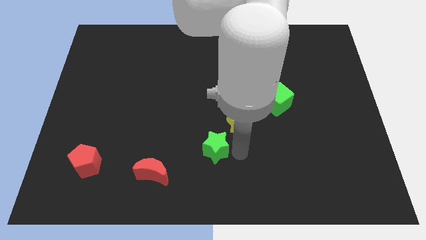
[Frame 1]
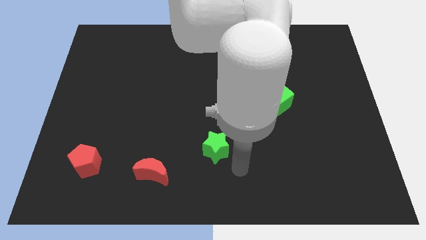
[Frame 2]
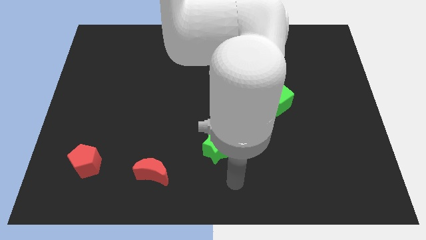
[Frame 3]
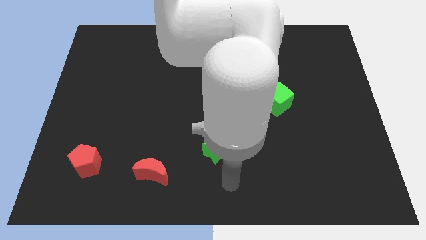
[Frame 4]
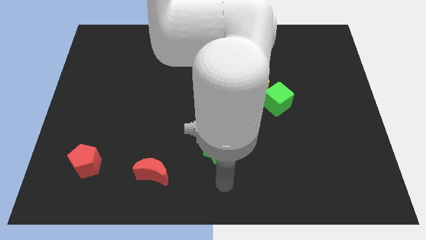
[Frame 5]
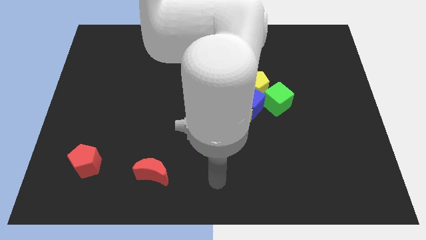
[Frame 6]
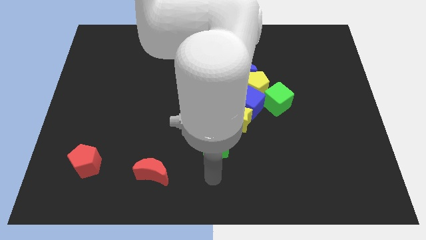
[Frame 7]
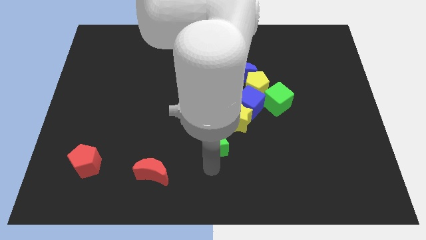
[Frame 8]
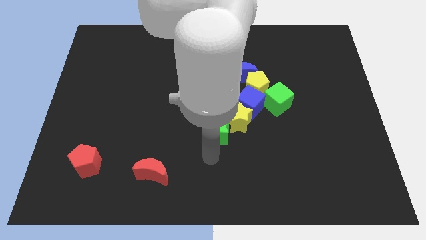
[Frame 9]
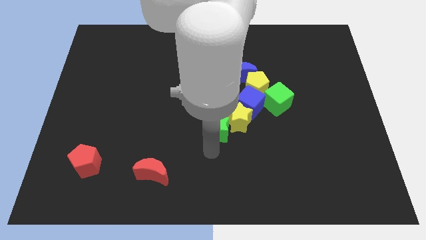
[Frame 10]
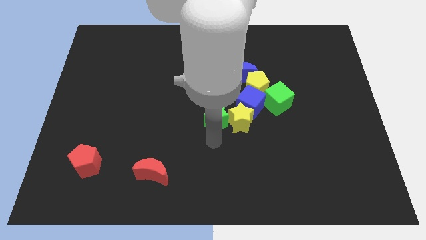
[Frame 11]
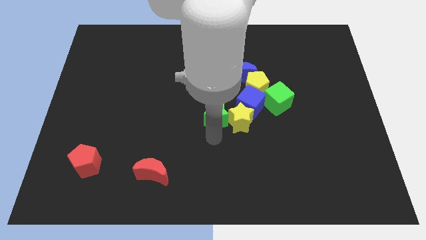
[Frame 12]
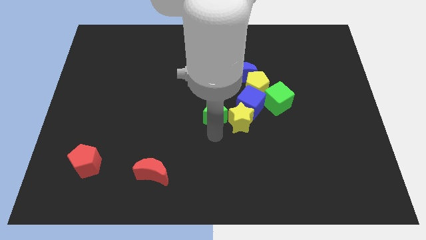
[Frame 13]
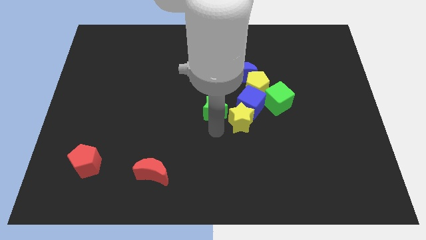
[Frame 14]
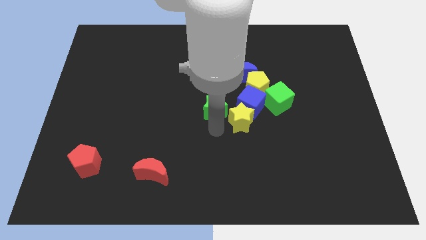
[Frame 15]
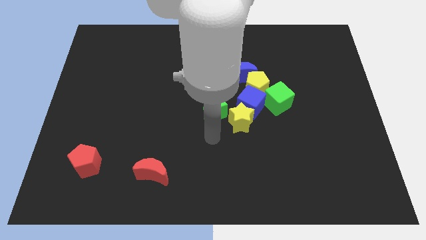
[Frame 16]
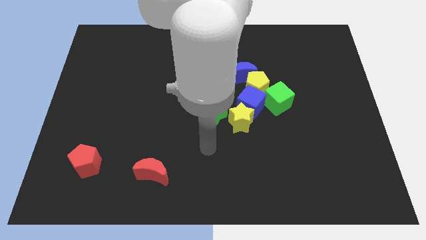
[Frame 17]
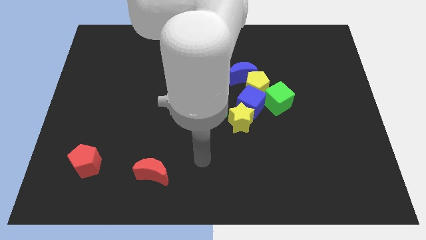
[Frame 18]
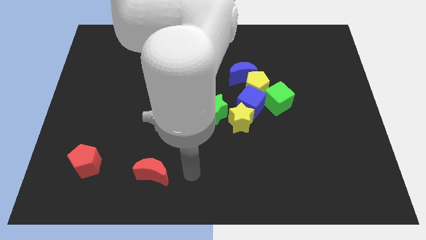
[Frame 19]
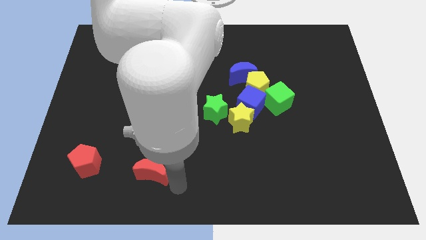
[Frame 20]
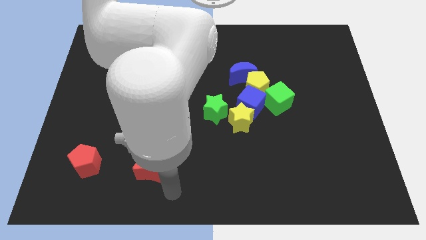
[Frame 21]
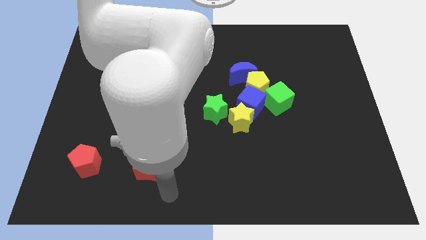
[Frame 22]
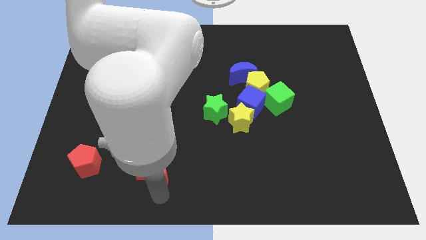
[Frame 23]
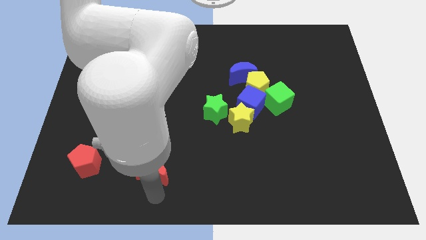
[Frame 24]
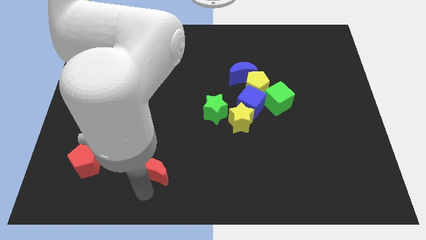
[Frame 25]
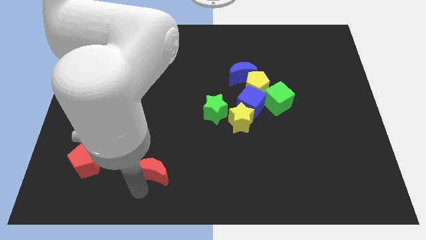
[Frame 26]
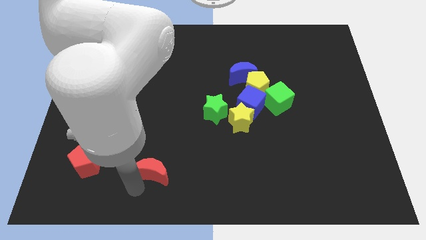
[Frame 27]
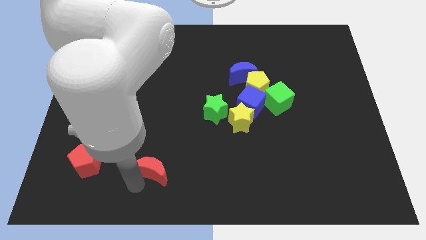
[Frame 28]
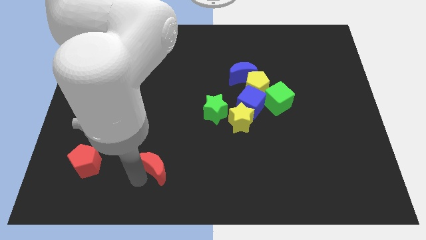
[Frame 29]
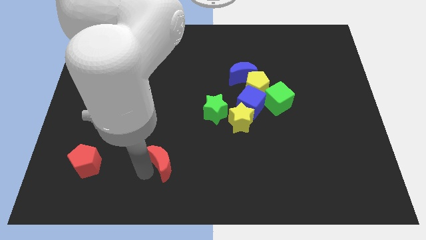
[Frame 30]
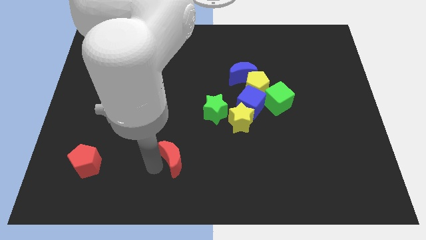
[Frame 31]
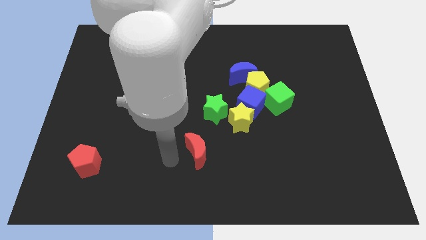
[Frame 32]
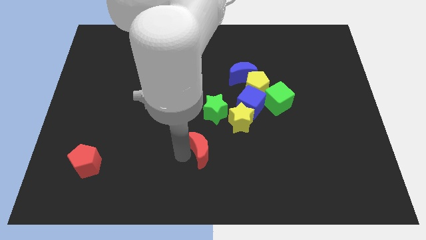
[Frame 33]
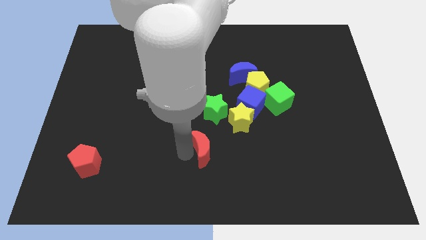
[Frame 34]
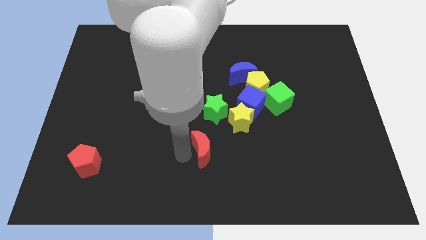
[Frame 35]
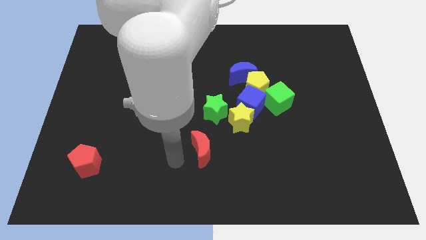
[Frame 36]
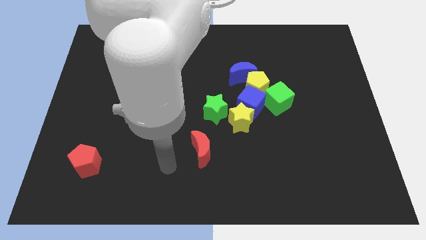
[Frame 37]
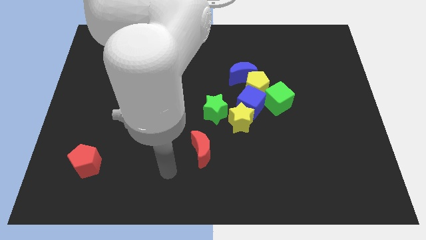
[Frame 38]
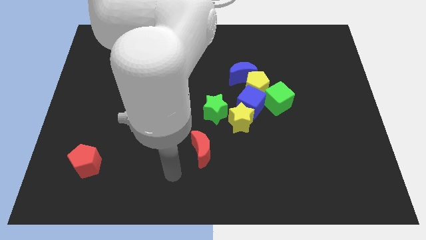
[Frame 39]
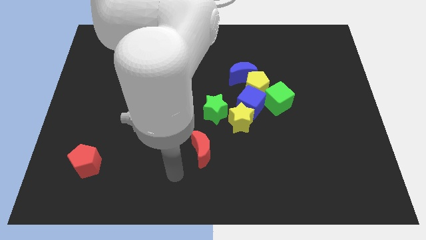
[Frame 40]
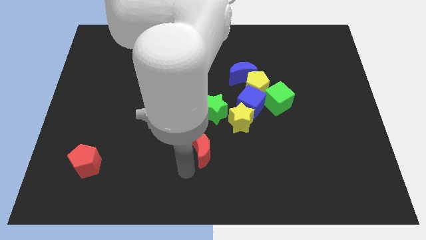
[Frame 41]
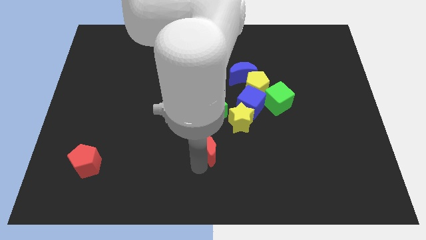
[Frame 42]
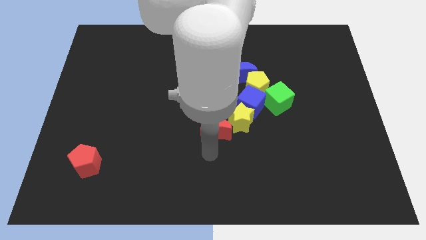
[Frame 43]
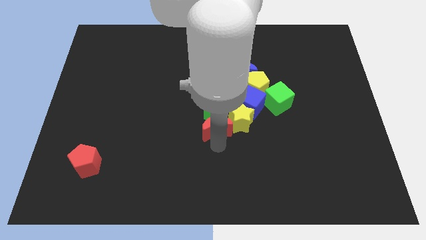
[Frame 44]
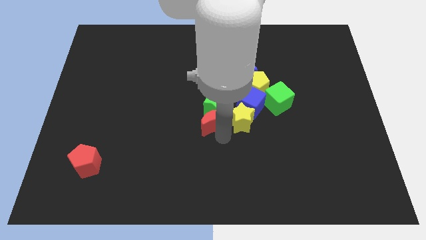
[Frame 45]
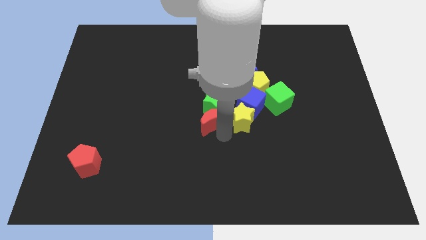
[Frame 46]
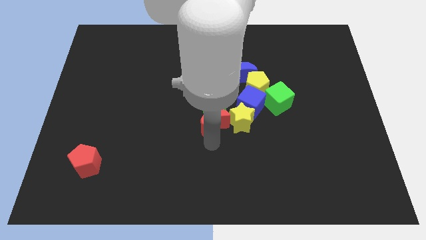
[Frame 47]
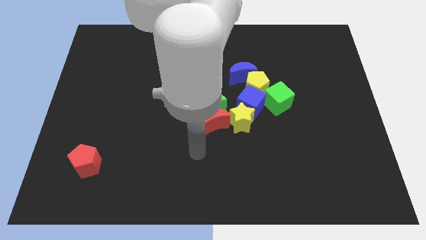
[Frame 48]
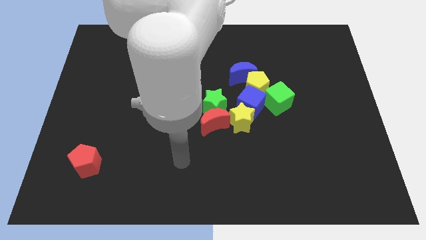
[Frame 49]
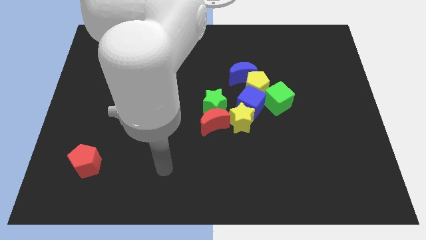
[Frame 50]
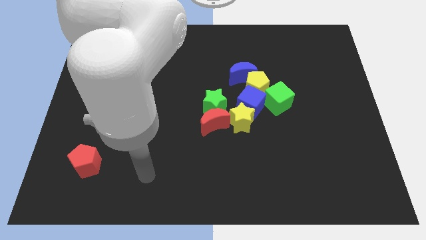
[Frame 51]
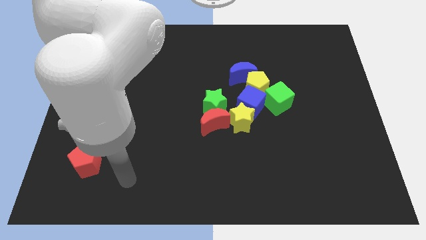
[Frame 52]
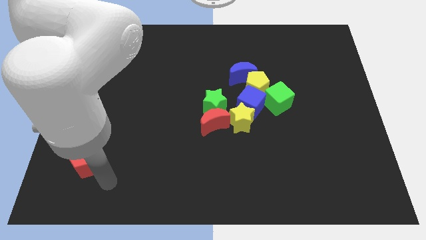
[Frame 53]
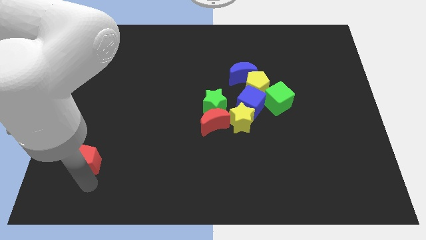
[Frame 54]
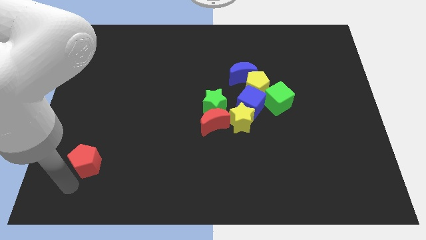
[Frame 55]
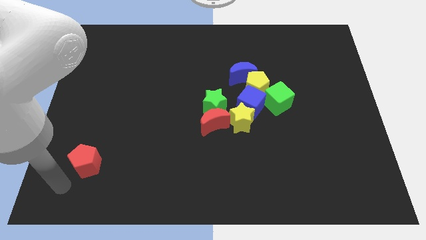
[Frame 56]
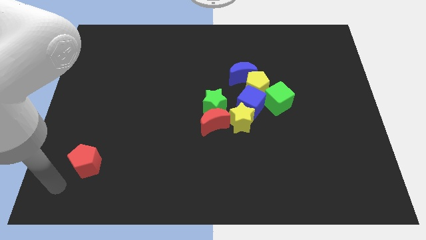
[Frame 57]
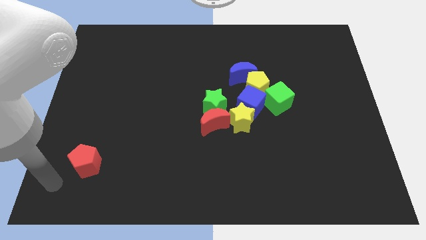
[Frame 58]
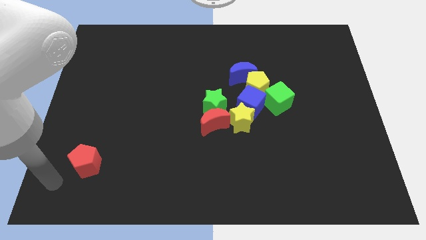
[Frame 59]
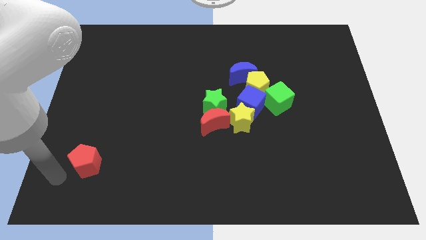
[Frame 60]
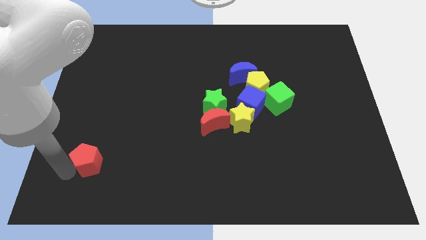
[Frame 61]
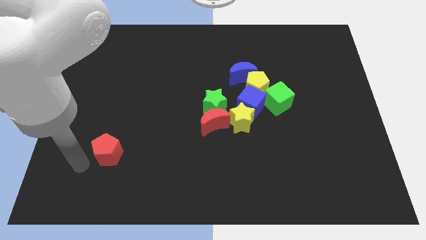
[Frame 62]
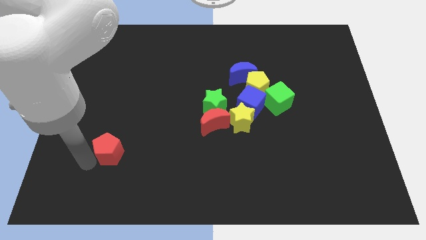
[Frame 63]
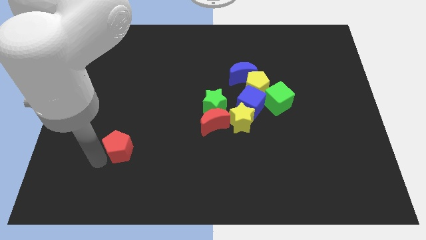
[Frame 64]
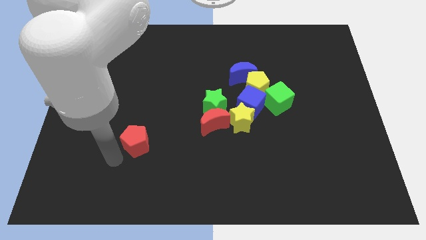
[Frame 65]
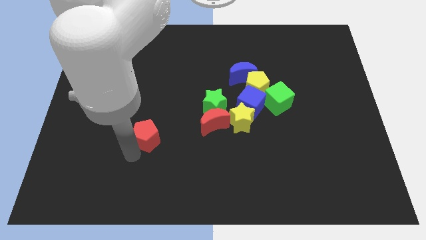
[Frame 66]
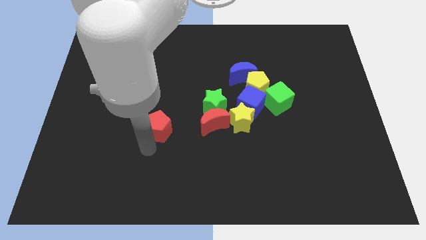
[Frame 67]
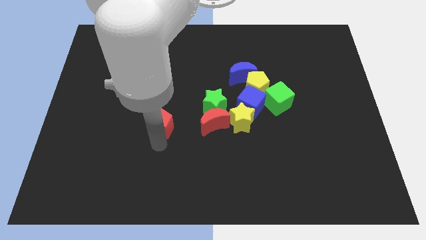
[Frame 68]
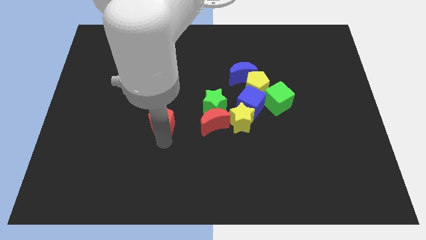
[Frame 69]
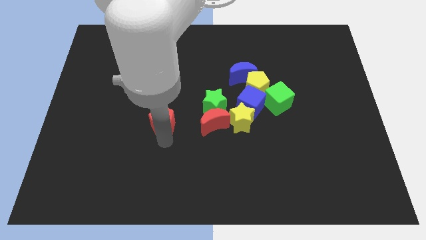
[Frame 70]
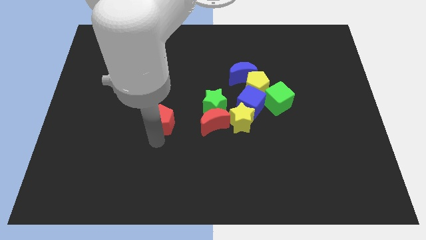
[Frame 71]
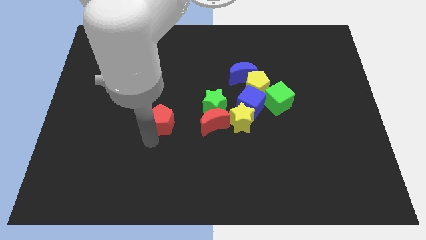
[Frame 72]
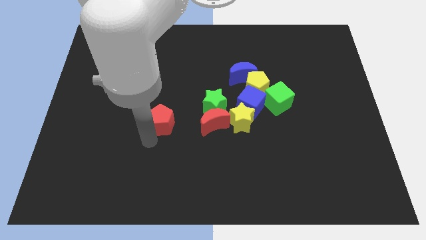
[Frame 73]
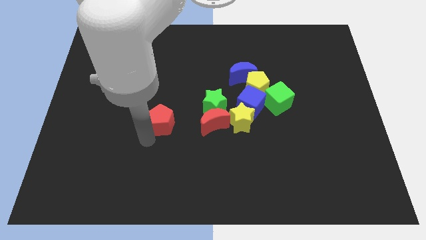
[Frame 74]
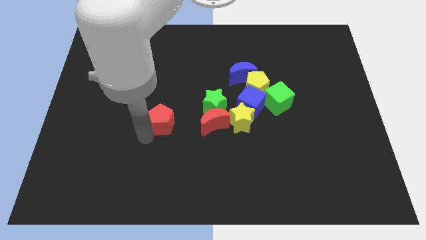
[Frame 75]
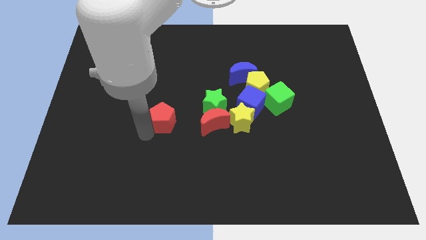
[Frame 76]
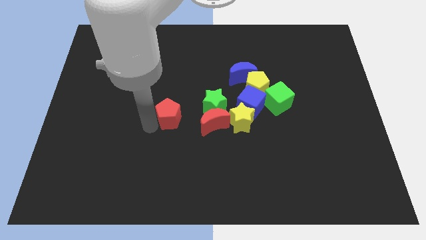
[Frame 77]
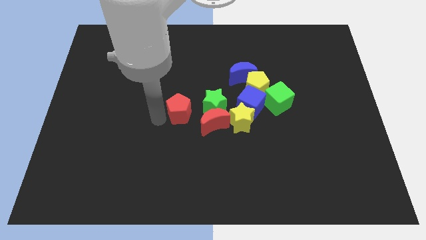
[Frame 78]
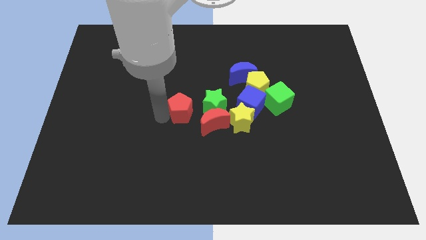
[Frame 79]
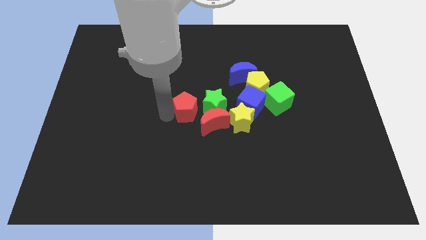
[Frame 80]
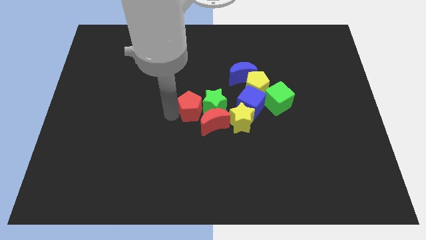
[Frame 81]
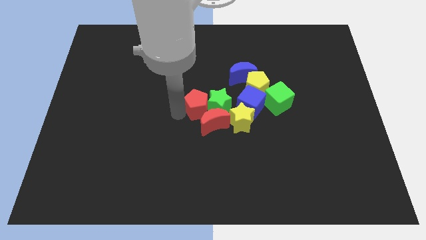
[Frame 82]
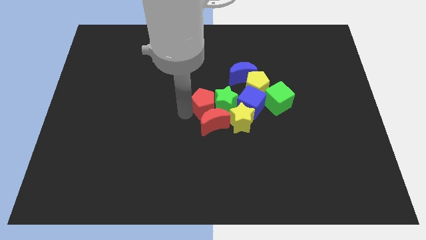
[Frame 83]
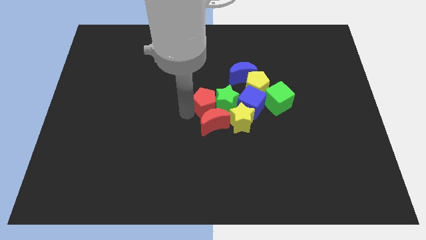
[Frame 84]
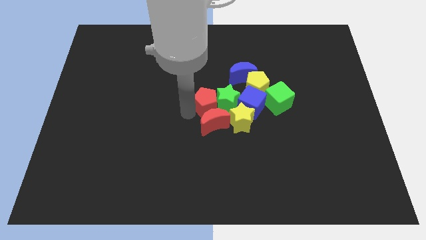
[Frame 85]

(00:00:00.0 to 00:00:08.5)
group up all the blocks at the center of the table

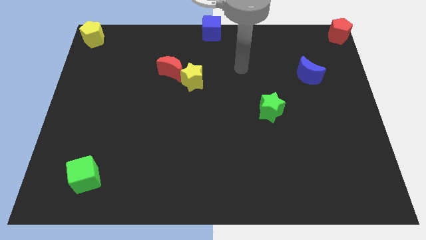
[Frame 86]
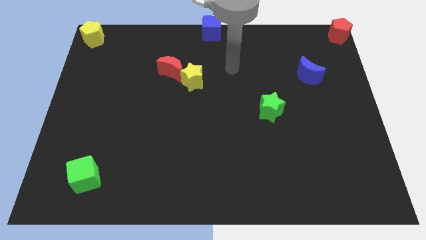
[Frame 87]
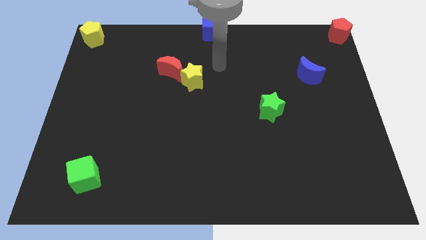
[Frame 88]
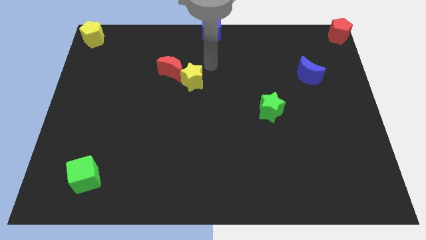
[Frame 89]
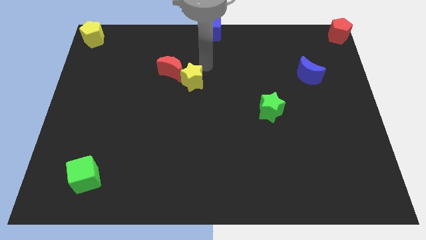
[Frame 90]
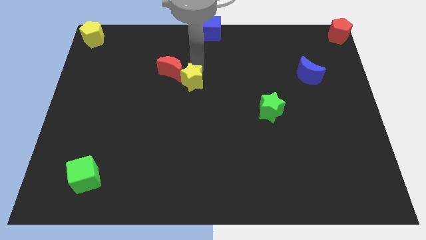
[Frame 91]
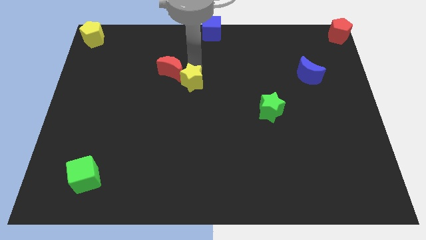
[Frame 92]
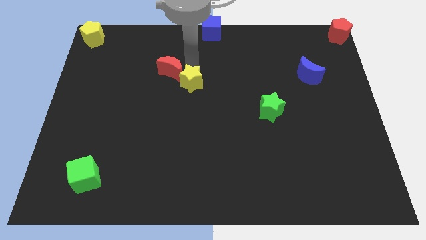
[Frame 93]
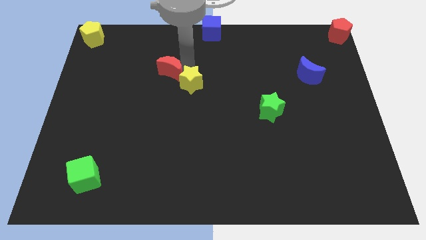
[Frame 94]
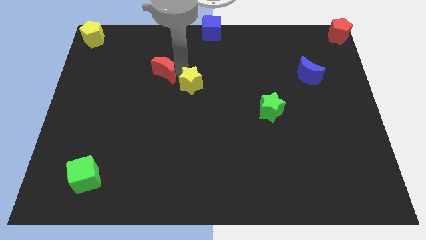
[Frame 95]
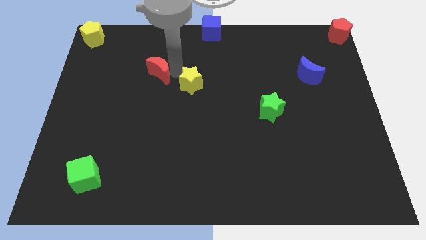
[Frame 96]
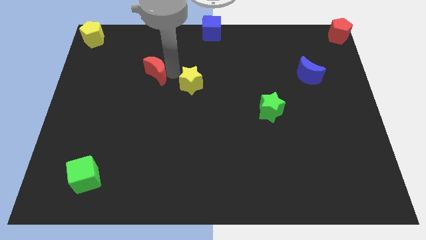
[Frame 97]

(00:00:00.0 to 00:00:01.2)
move arm above the red moon
